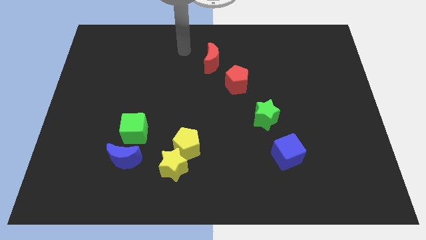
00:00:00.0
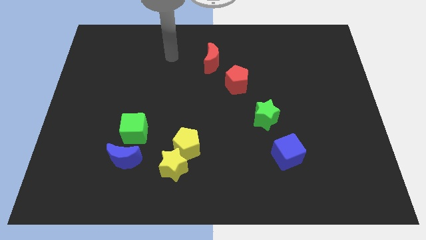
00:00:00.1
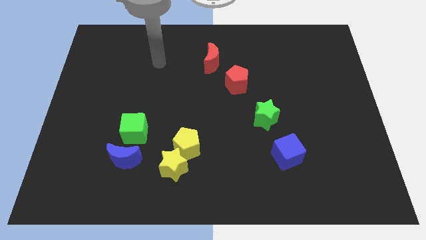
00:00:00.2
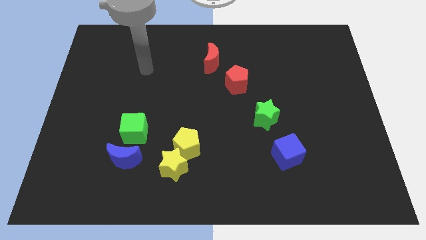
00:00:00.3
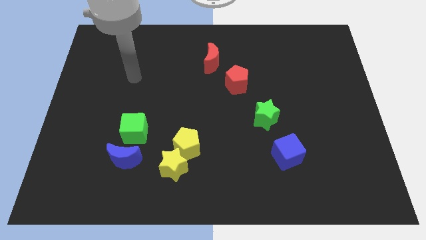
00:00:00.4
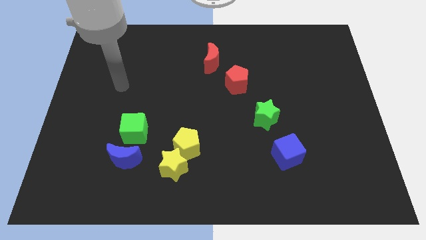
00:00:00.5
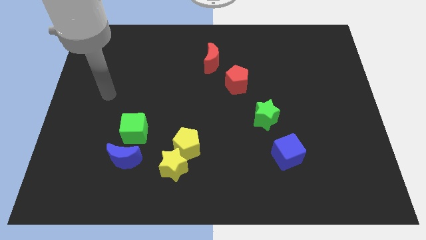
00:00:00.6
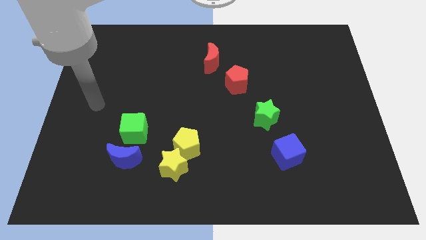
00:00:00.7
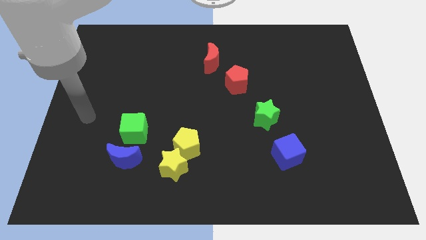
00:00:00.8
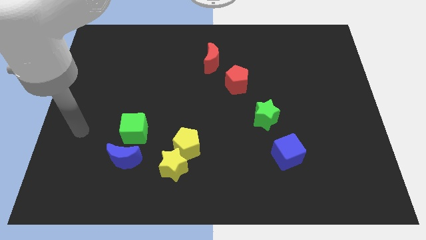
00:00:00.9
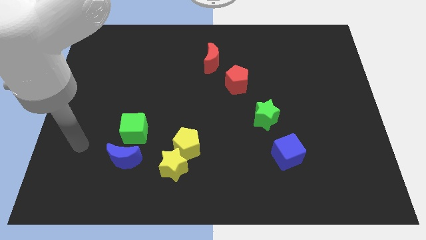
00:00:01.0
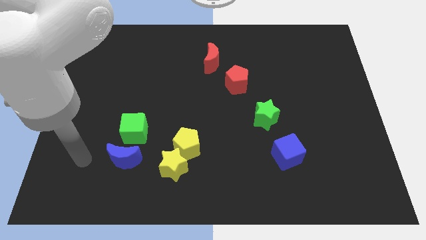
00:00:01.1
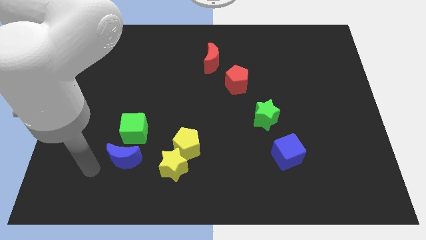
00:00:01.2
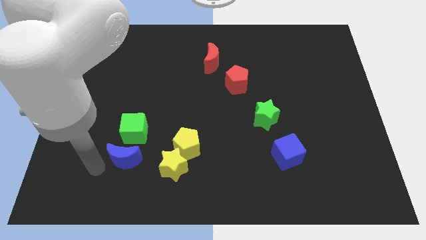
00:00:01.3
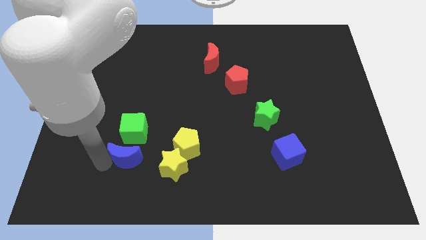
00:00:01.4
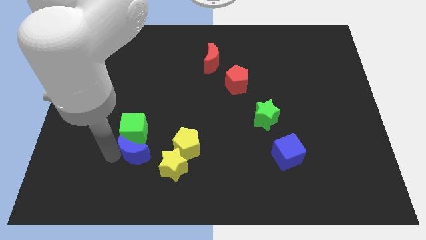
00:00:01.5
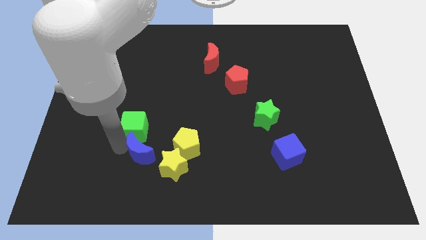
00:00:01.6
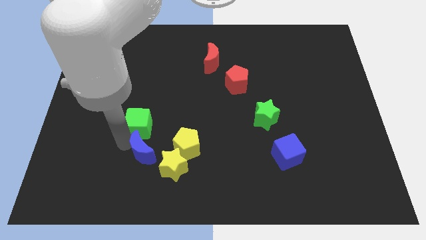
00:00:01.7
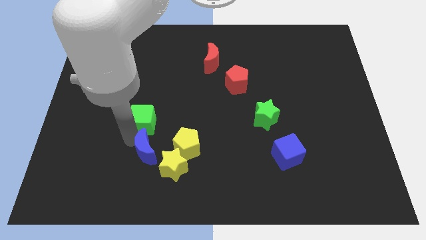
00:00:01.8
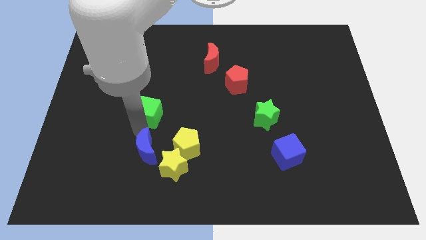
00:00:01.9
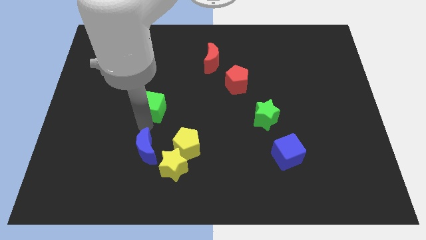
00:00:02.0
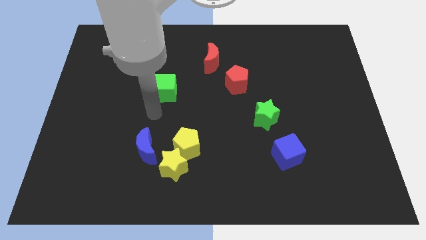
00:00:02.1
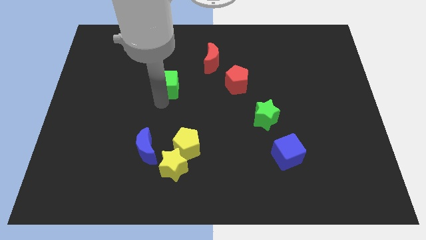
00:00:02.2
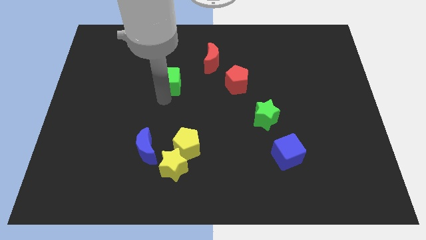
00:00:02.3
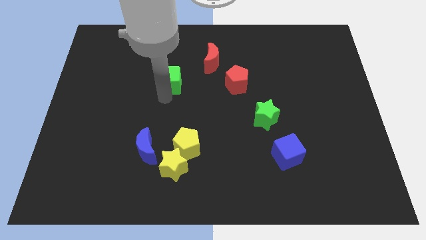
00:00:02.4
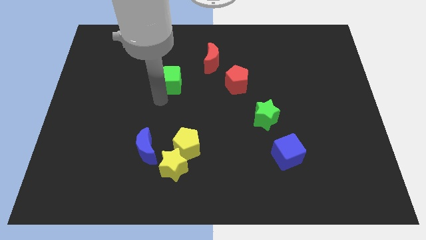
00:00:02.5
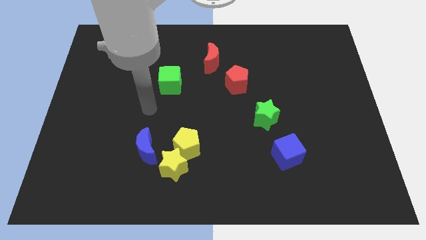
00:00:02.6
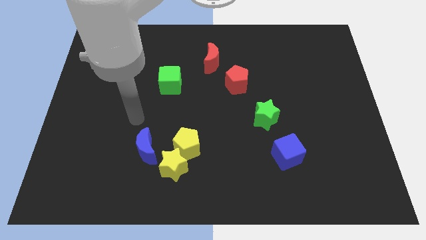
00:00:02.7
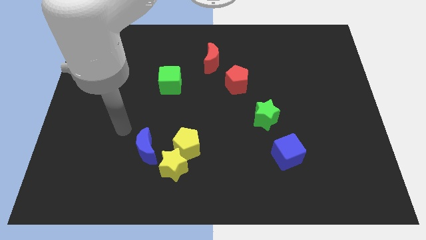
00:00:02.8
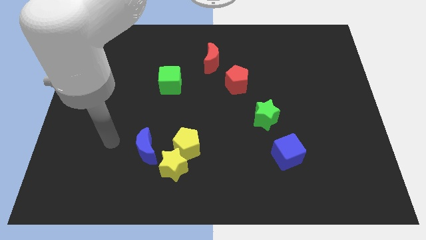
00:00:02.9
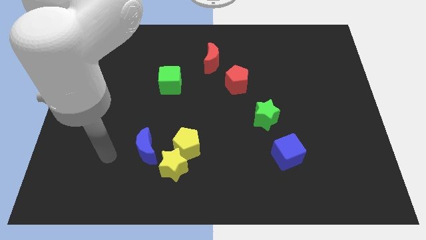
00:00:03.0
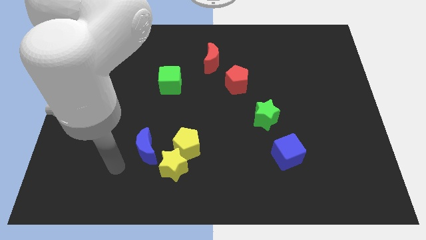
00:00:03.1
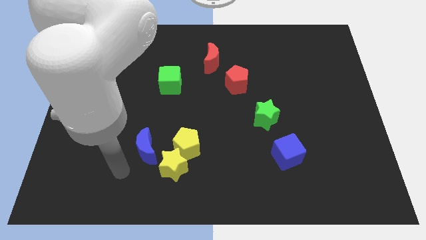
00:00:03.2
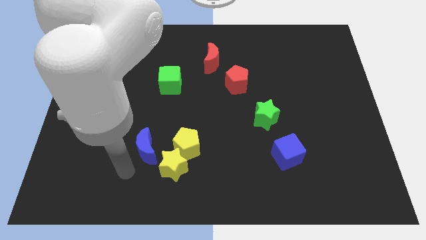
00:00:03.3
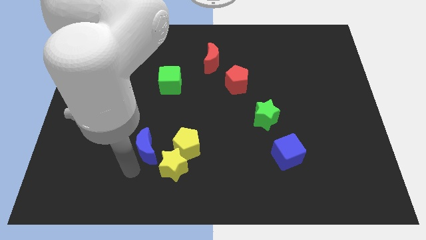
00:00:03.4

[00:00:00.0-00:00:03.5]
drag the green cube above the blue crescent

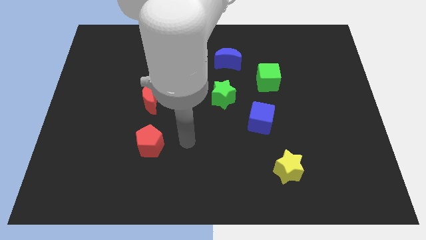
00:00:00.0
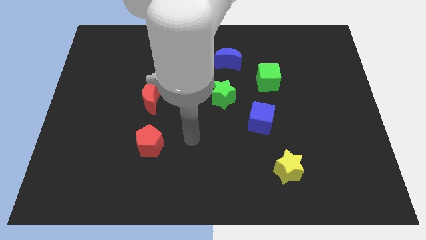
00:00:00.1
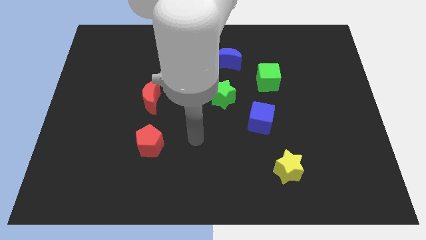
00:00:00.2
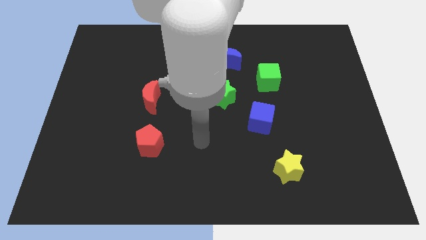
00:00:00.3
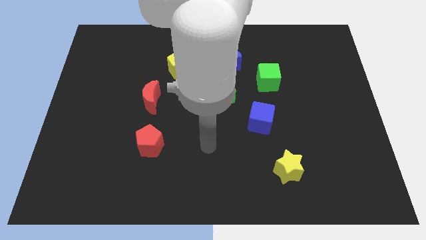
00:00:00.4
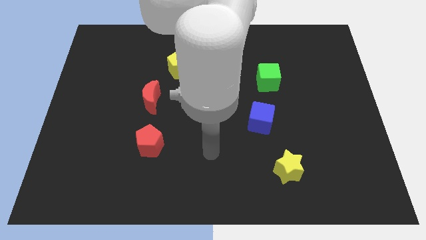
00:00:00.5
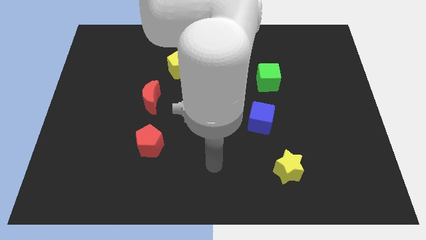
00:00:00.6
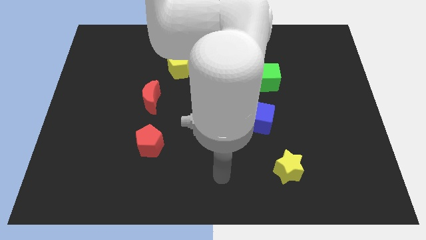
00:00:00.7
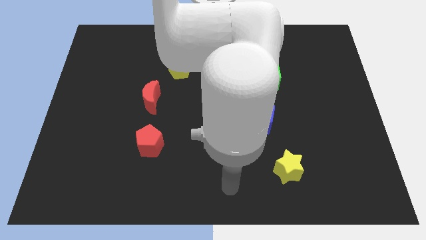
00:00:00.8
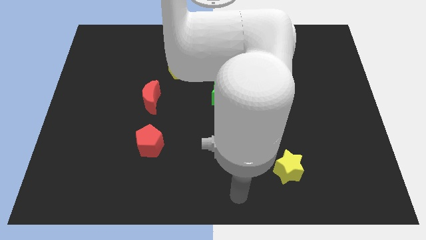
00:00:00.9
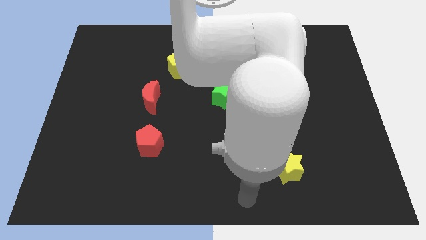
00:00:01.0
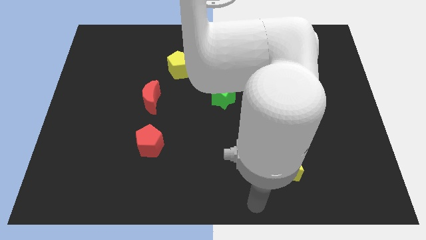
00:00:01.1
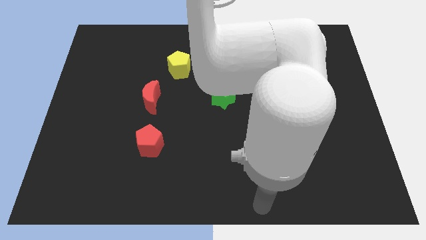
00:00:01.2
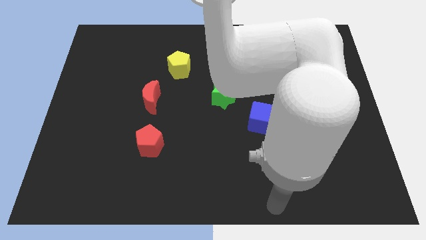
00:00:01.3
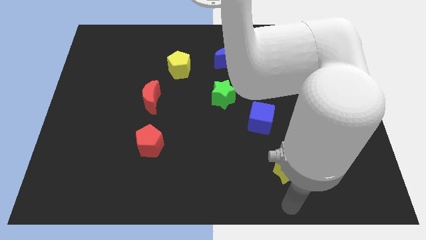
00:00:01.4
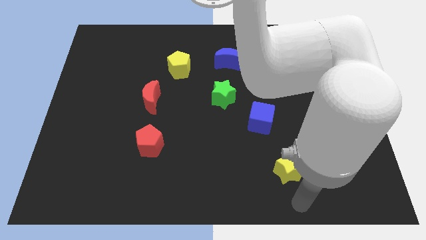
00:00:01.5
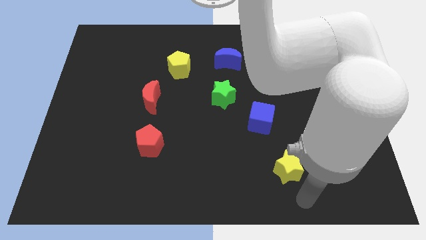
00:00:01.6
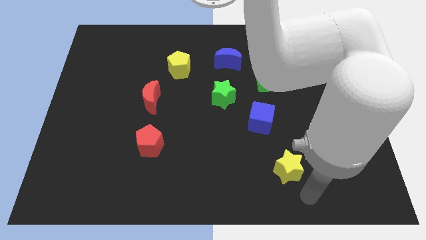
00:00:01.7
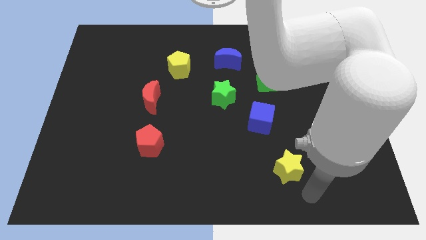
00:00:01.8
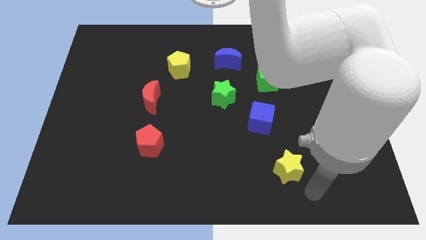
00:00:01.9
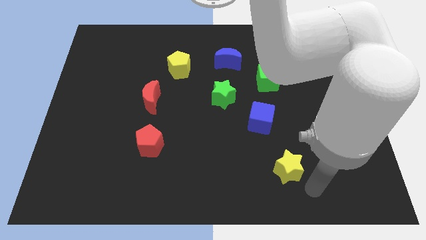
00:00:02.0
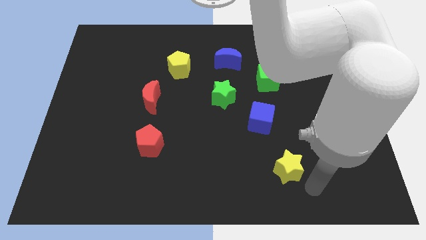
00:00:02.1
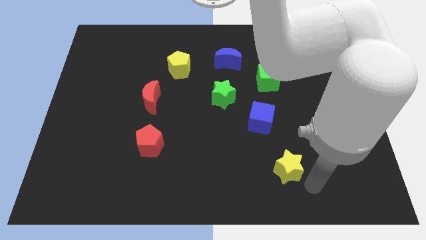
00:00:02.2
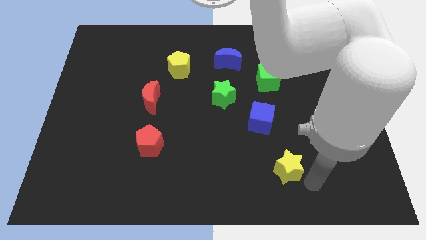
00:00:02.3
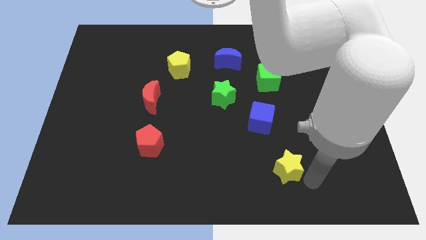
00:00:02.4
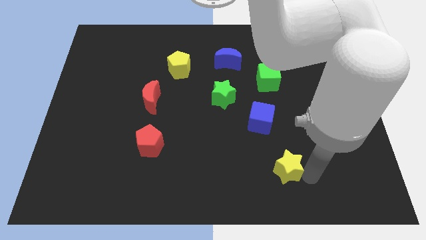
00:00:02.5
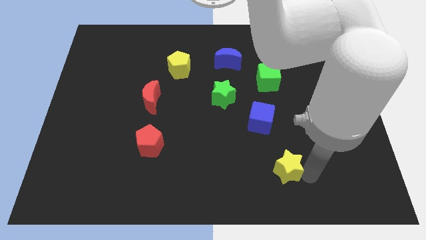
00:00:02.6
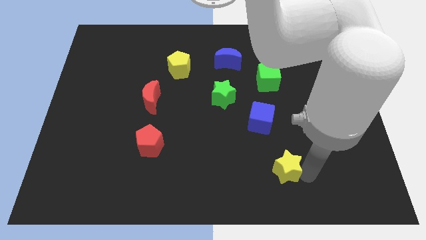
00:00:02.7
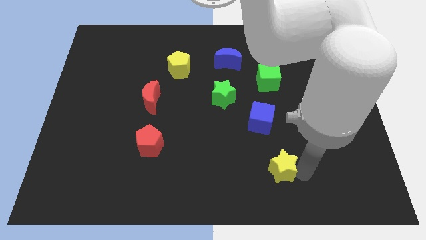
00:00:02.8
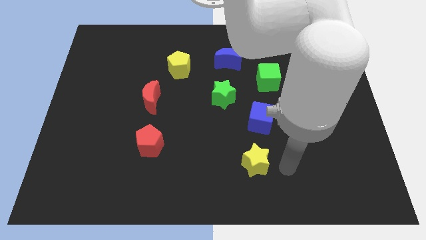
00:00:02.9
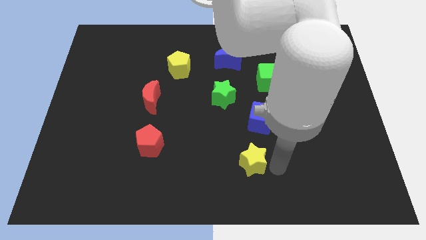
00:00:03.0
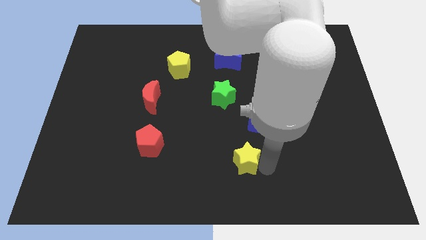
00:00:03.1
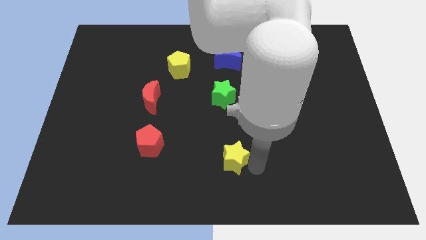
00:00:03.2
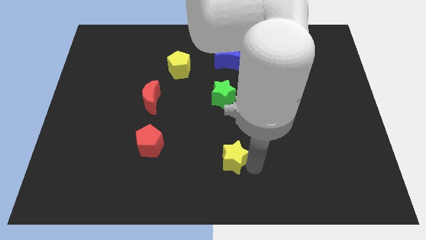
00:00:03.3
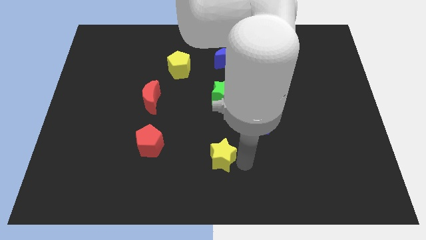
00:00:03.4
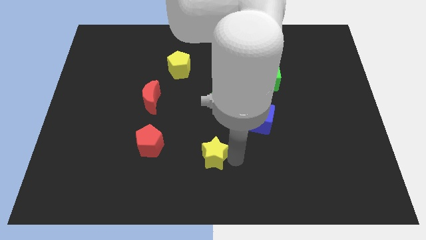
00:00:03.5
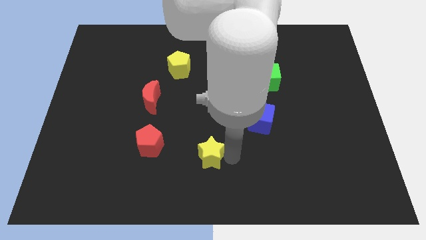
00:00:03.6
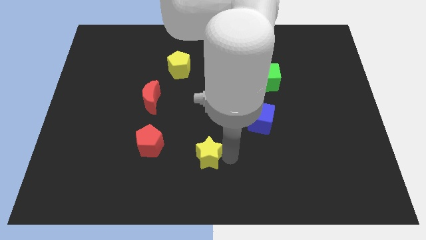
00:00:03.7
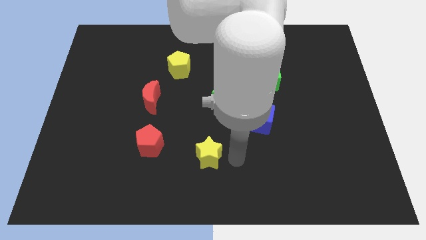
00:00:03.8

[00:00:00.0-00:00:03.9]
push the yellow star towards the red pentagon

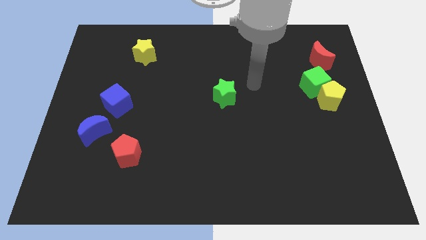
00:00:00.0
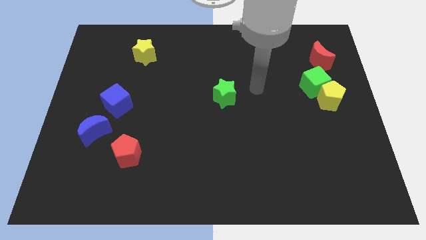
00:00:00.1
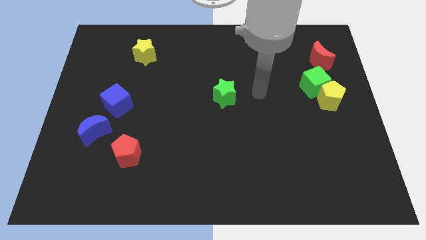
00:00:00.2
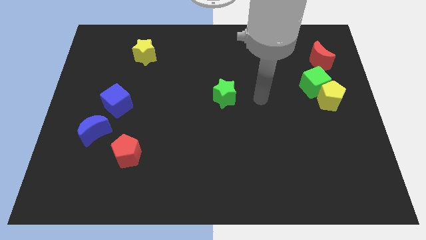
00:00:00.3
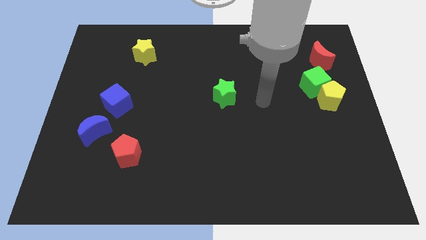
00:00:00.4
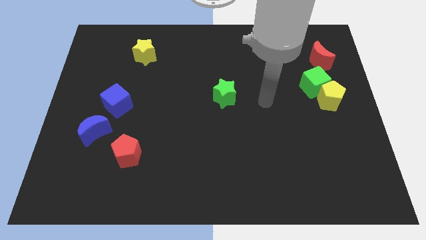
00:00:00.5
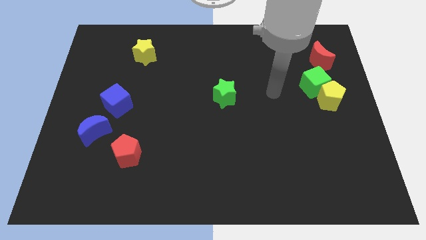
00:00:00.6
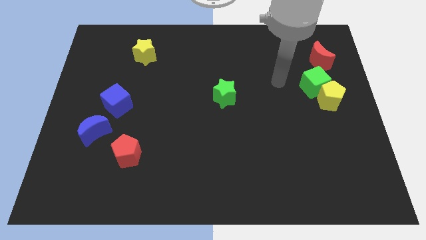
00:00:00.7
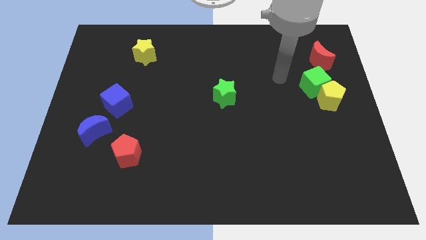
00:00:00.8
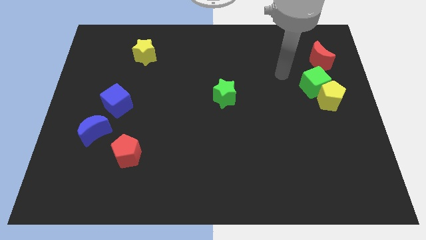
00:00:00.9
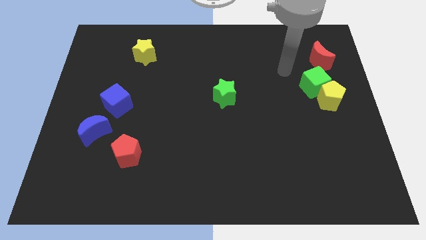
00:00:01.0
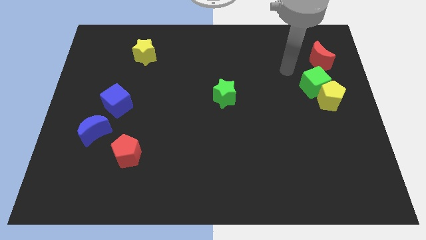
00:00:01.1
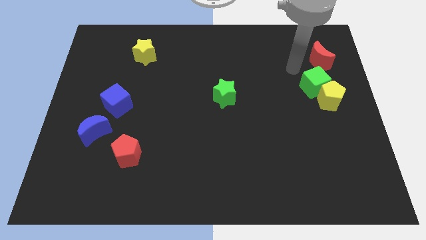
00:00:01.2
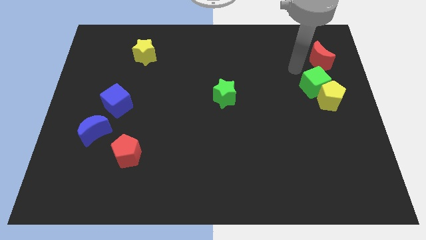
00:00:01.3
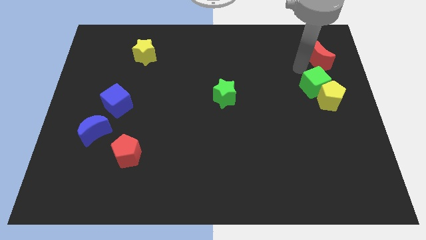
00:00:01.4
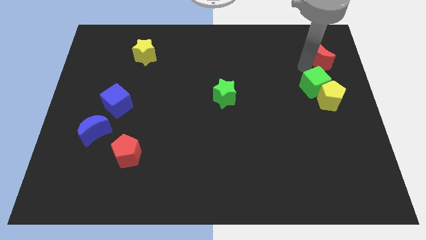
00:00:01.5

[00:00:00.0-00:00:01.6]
point your arm to the left of the red crescent
